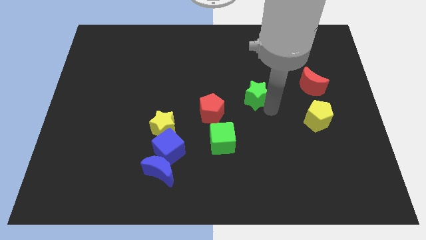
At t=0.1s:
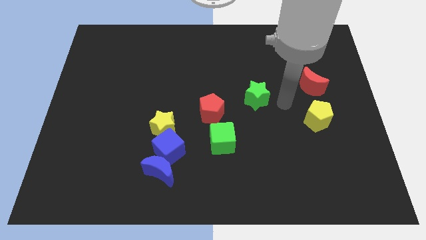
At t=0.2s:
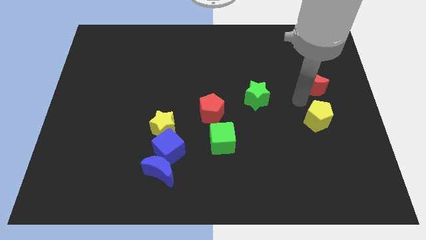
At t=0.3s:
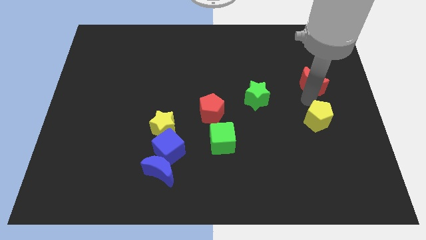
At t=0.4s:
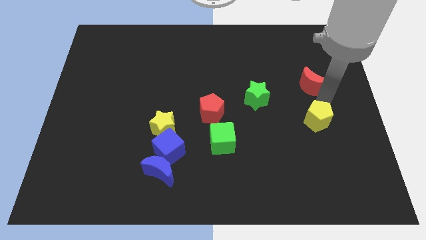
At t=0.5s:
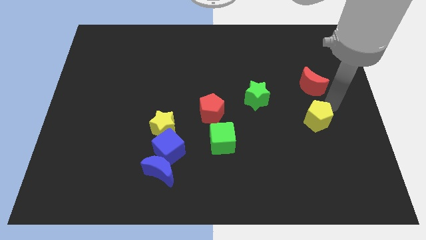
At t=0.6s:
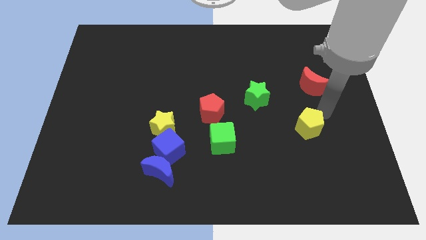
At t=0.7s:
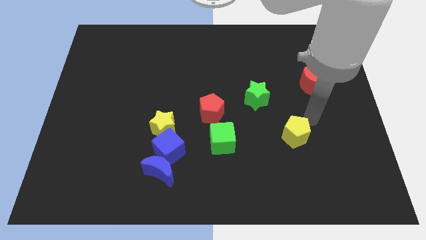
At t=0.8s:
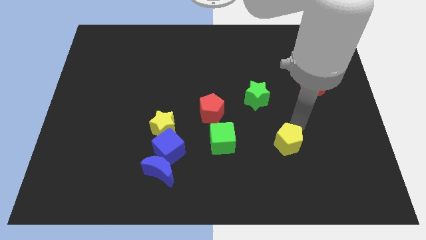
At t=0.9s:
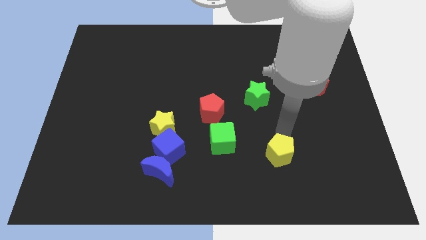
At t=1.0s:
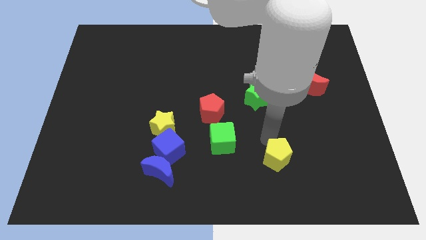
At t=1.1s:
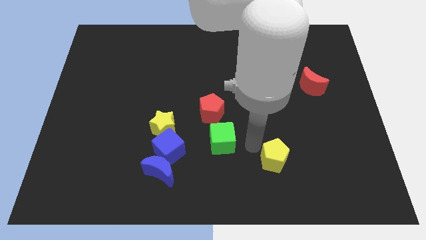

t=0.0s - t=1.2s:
move the yellow pentagon away from the bottom side of the red crescent

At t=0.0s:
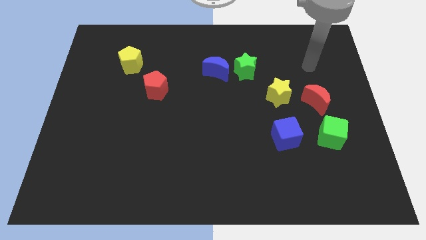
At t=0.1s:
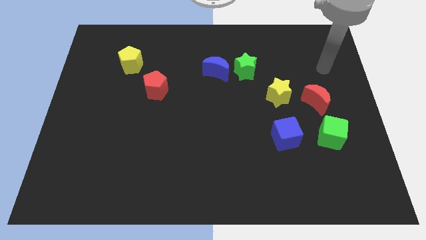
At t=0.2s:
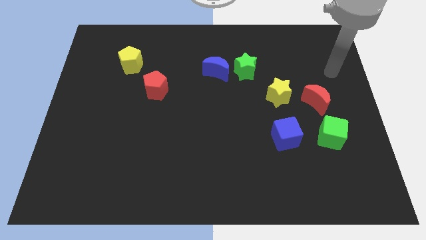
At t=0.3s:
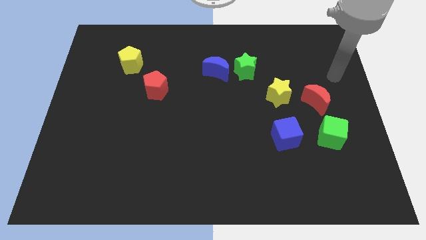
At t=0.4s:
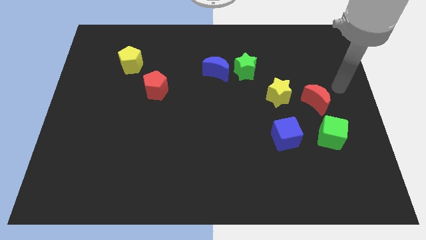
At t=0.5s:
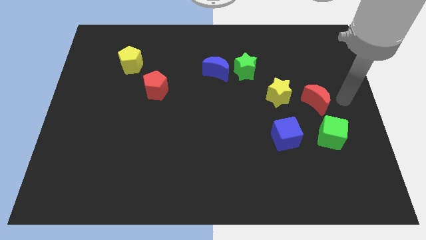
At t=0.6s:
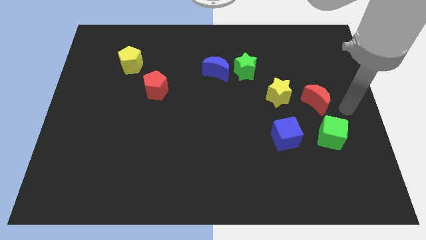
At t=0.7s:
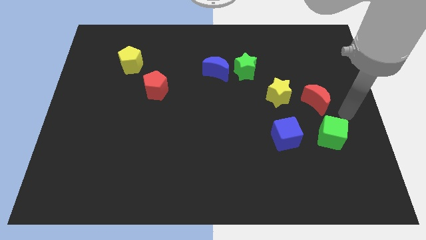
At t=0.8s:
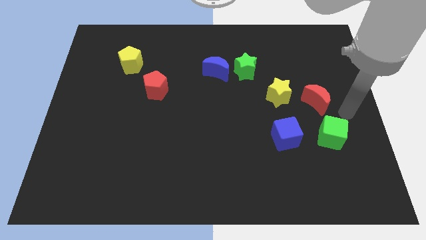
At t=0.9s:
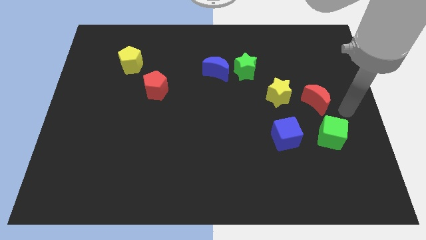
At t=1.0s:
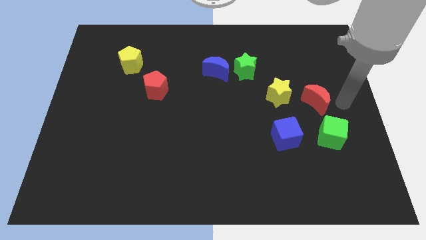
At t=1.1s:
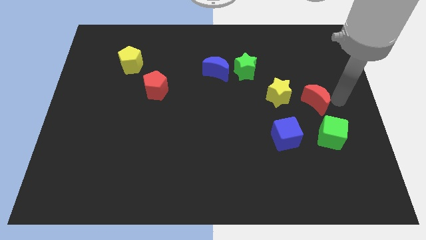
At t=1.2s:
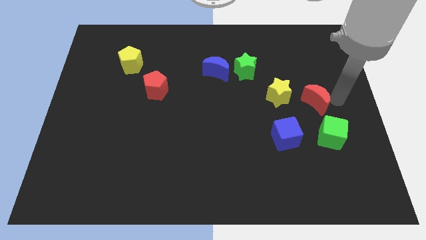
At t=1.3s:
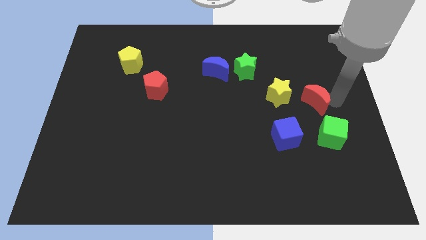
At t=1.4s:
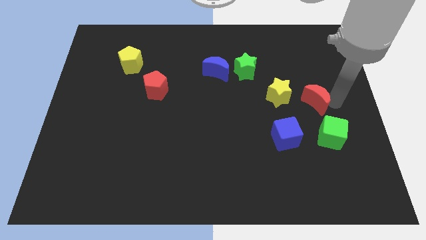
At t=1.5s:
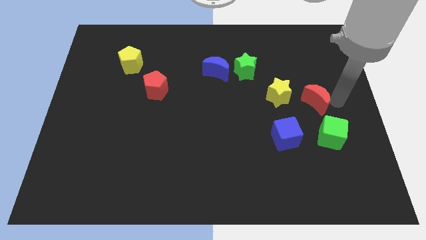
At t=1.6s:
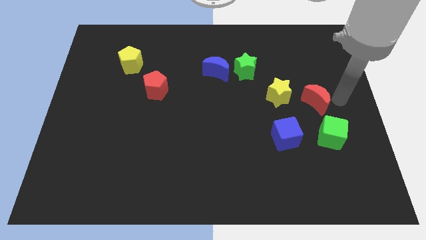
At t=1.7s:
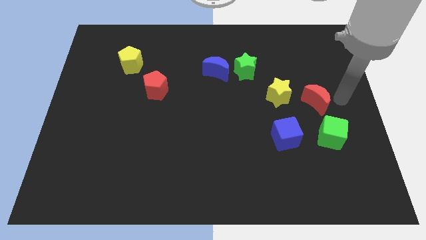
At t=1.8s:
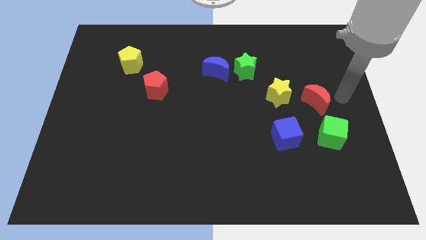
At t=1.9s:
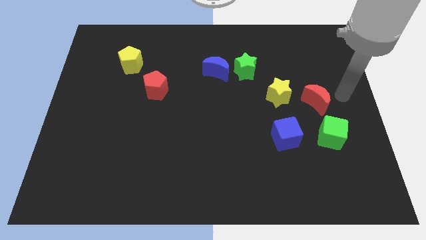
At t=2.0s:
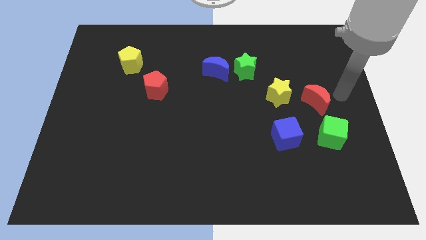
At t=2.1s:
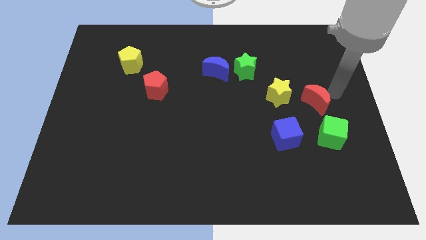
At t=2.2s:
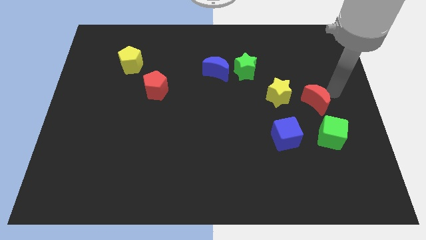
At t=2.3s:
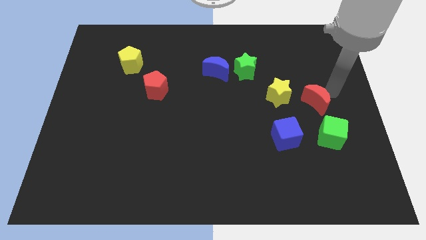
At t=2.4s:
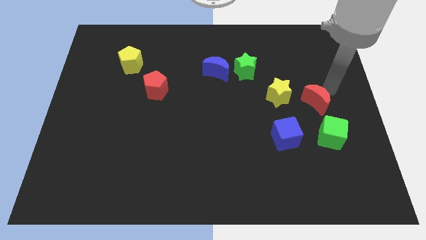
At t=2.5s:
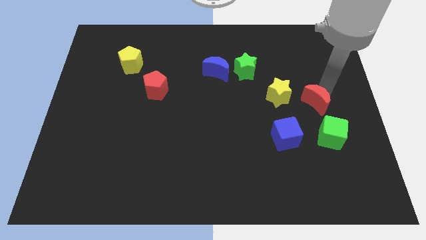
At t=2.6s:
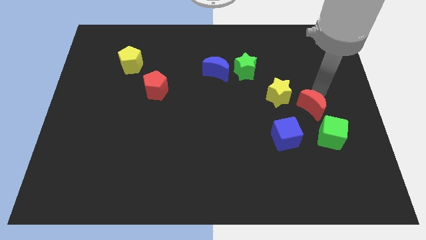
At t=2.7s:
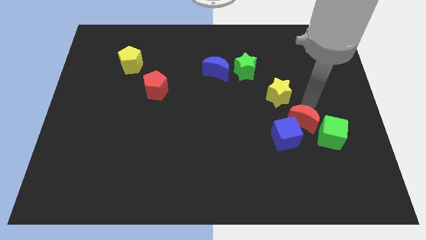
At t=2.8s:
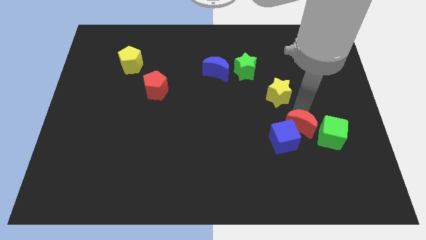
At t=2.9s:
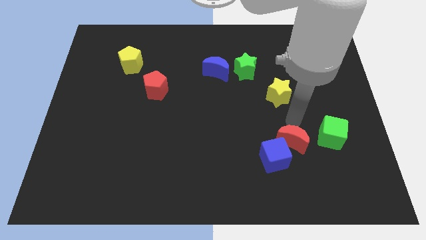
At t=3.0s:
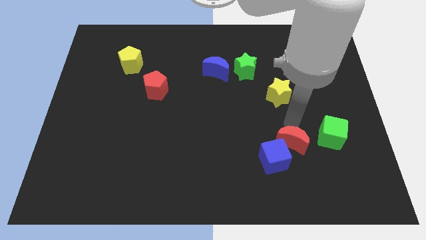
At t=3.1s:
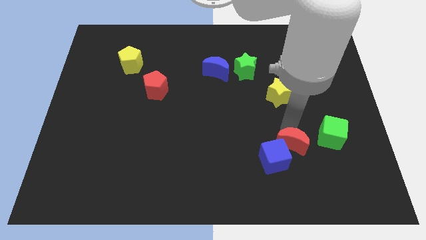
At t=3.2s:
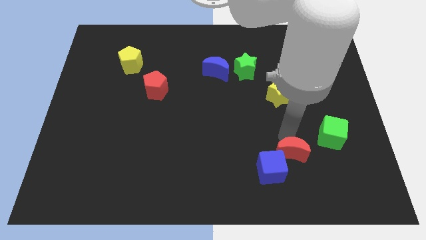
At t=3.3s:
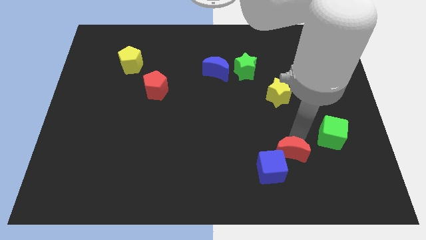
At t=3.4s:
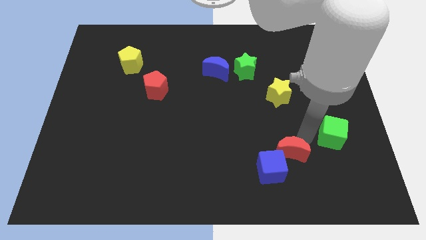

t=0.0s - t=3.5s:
push the red moon into the blue cube

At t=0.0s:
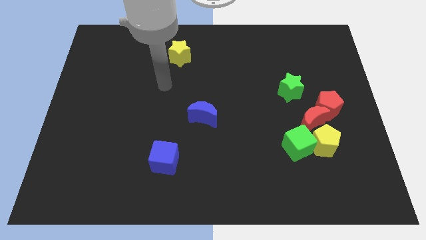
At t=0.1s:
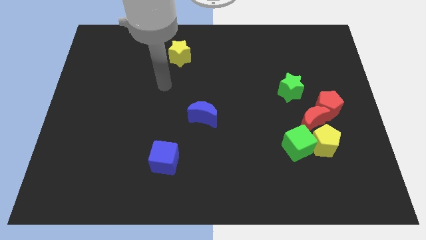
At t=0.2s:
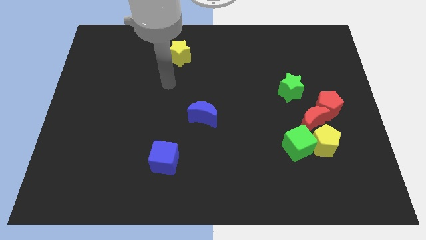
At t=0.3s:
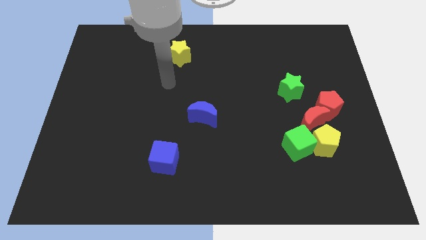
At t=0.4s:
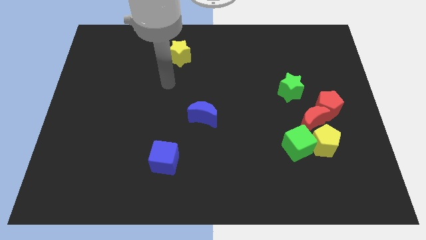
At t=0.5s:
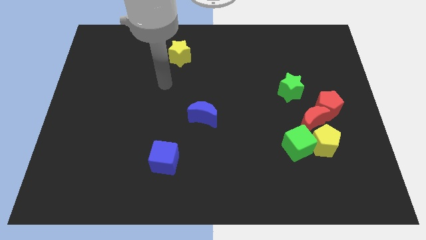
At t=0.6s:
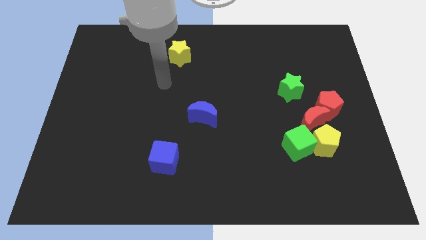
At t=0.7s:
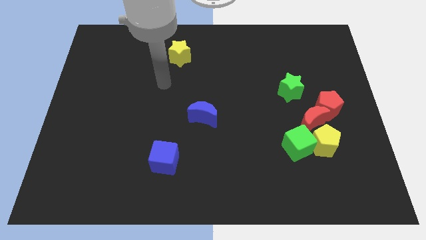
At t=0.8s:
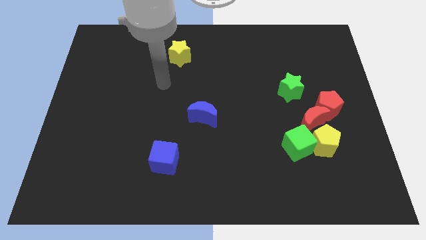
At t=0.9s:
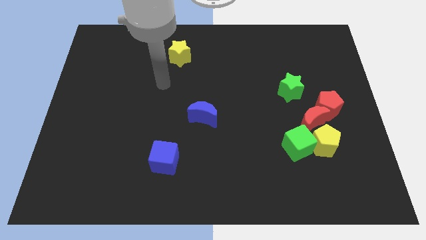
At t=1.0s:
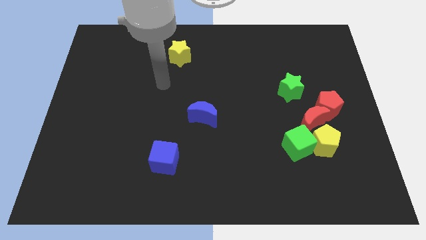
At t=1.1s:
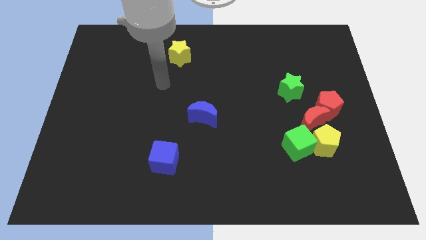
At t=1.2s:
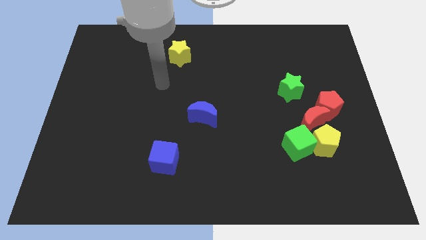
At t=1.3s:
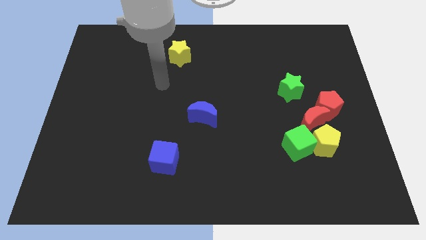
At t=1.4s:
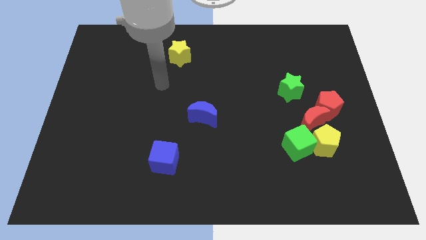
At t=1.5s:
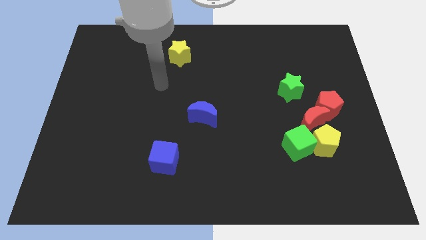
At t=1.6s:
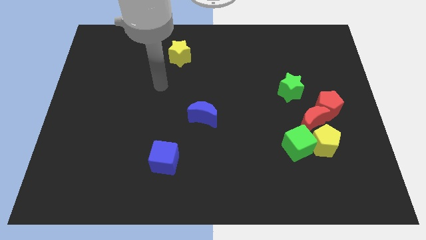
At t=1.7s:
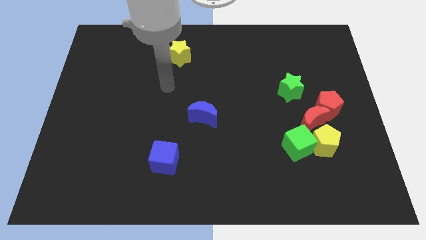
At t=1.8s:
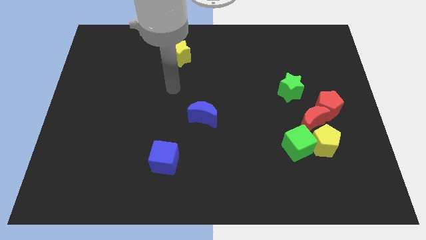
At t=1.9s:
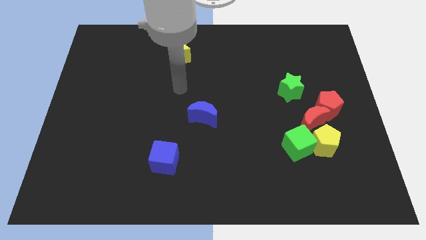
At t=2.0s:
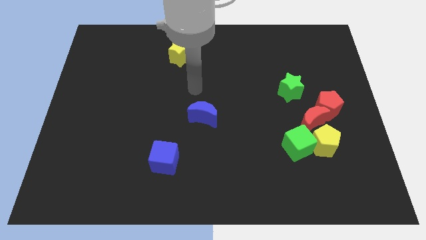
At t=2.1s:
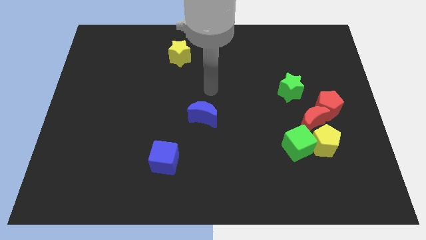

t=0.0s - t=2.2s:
move your arm to the top of the blue crescent

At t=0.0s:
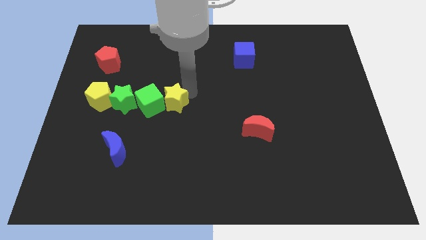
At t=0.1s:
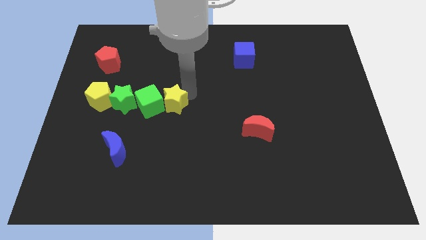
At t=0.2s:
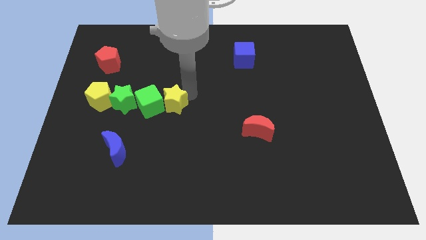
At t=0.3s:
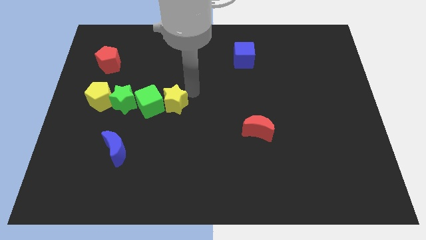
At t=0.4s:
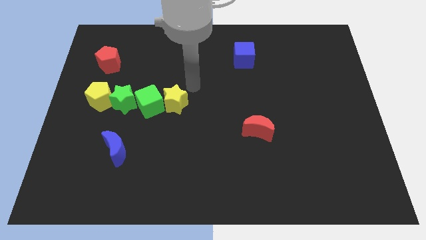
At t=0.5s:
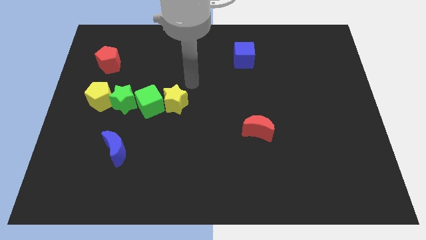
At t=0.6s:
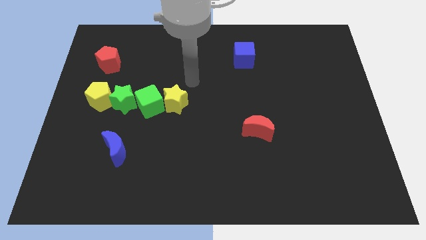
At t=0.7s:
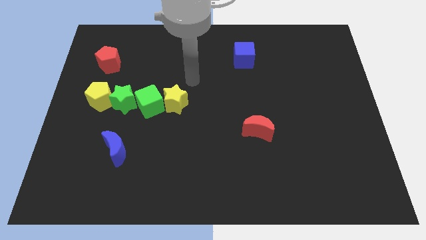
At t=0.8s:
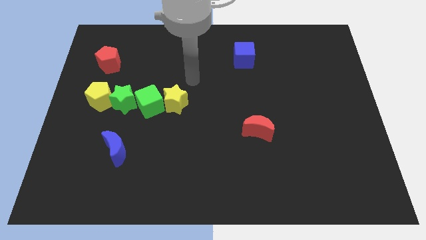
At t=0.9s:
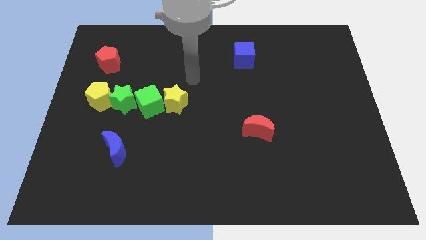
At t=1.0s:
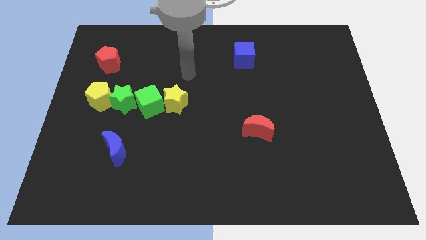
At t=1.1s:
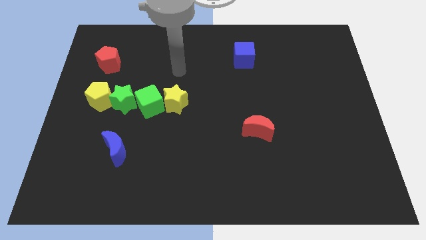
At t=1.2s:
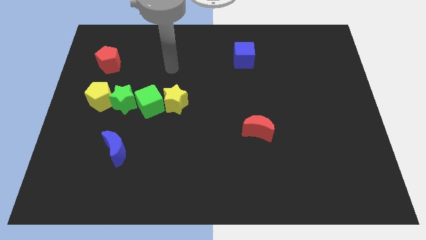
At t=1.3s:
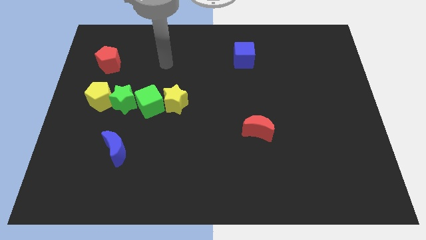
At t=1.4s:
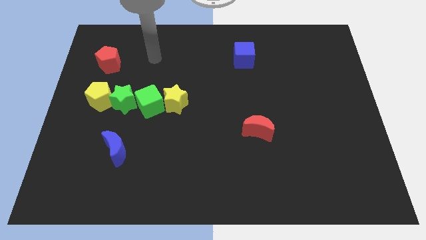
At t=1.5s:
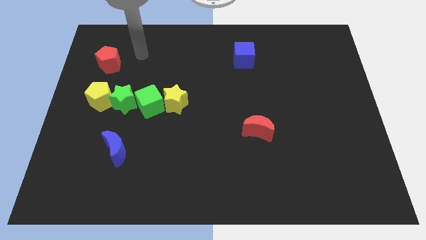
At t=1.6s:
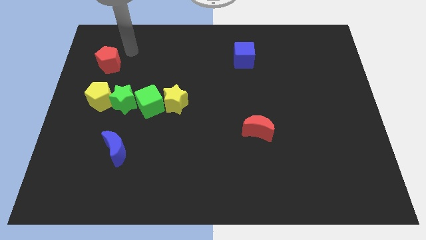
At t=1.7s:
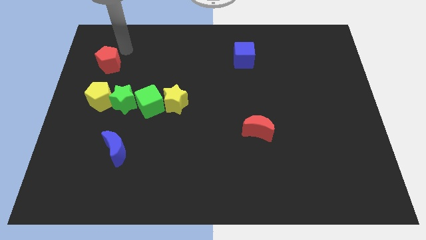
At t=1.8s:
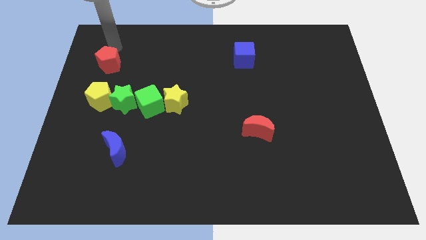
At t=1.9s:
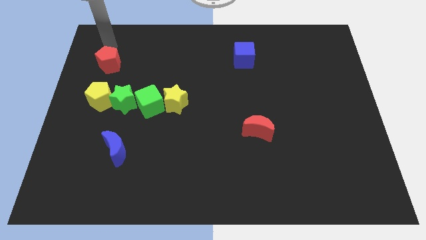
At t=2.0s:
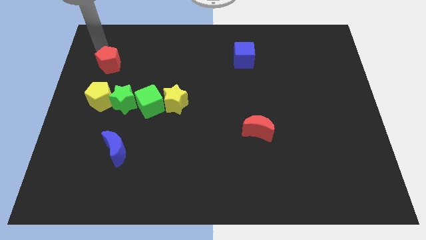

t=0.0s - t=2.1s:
place your arm at the top left of red pentagon
